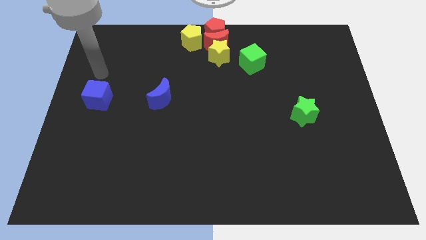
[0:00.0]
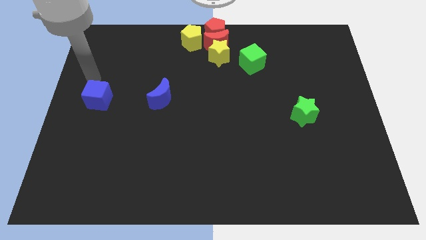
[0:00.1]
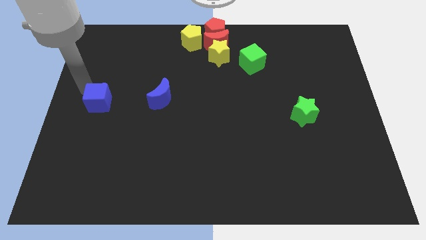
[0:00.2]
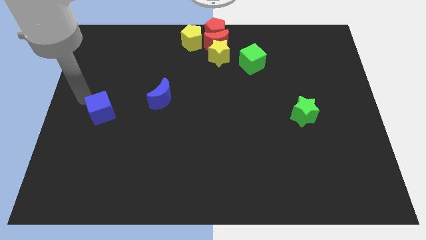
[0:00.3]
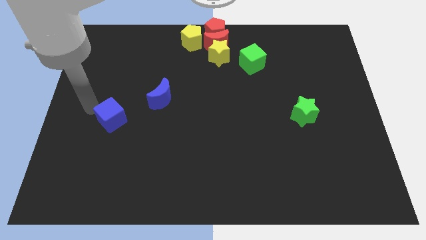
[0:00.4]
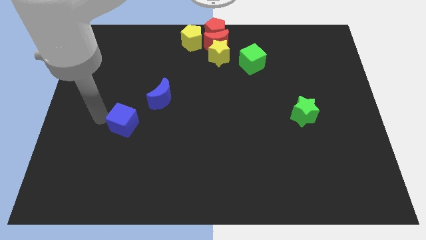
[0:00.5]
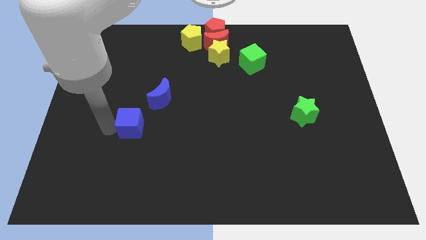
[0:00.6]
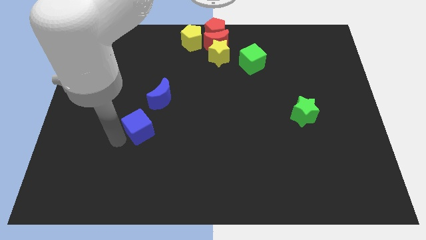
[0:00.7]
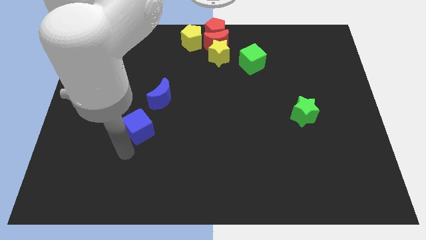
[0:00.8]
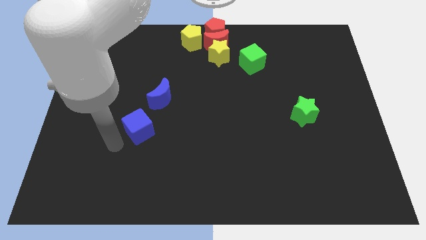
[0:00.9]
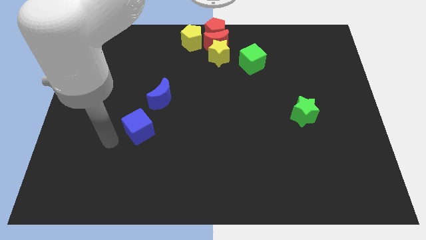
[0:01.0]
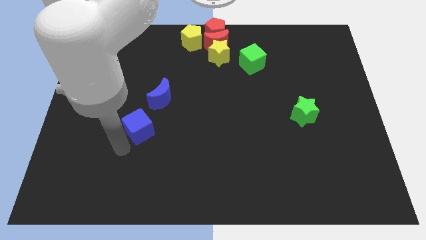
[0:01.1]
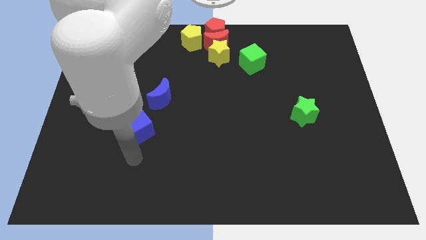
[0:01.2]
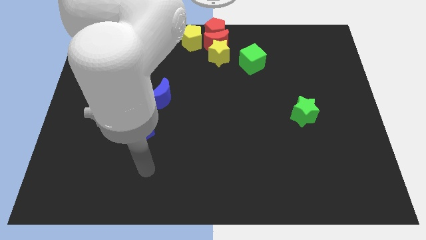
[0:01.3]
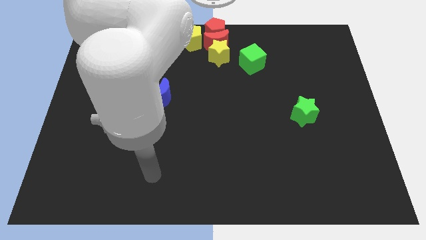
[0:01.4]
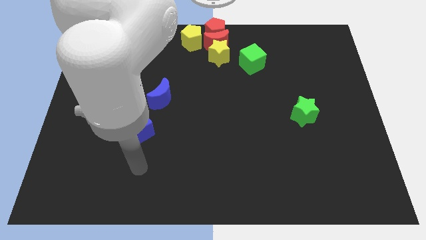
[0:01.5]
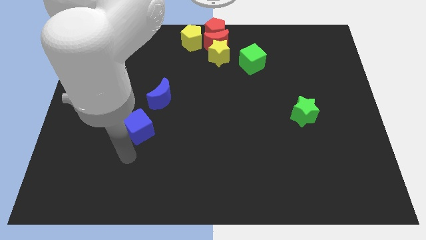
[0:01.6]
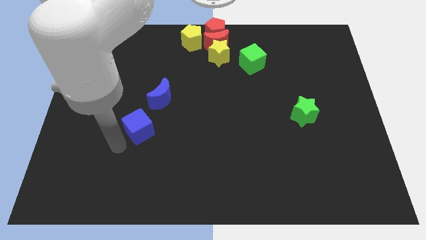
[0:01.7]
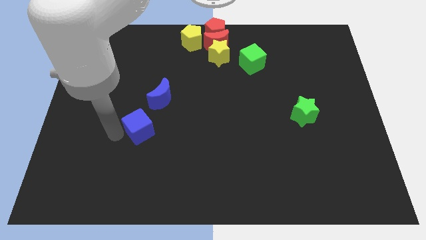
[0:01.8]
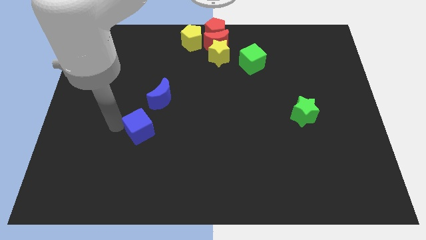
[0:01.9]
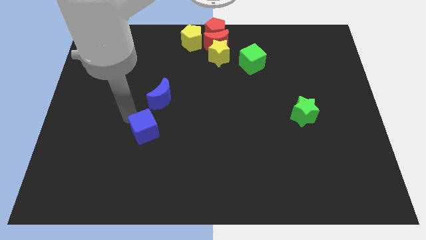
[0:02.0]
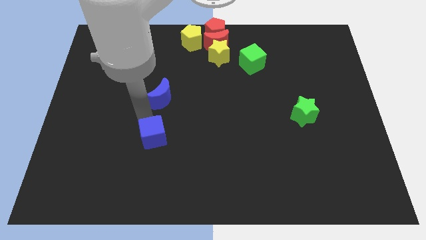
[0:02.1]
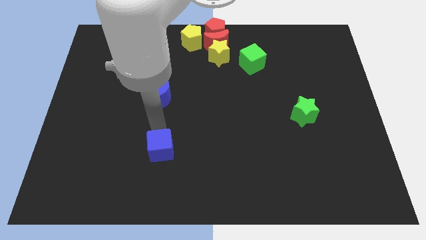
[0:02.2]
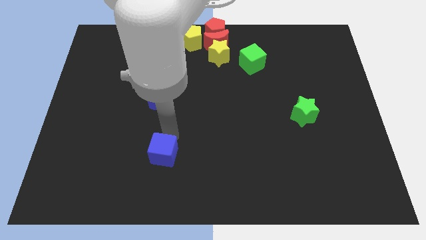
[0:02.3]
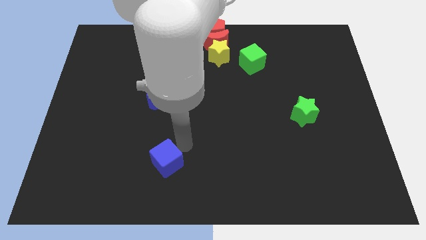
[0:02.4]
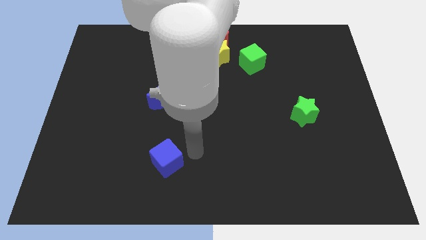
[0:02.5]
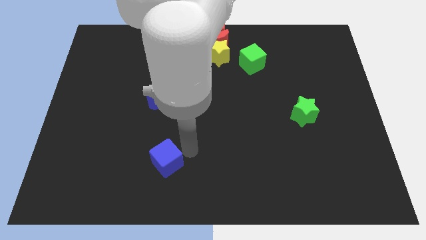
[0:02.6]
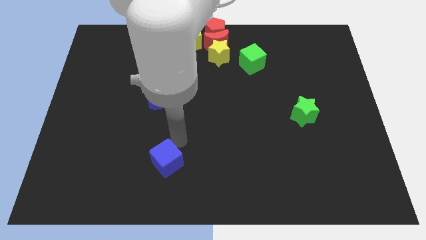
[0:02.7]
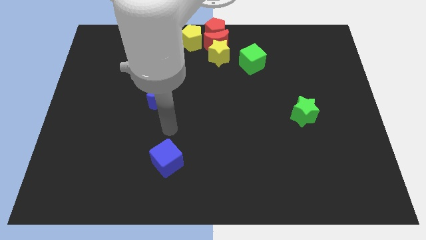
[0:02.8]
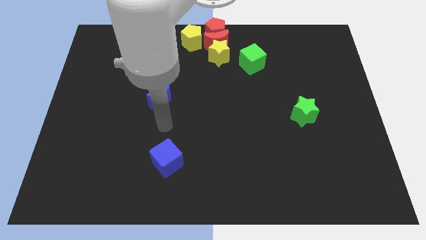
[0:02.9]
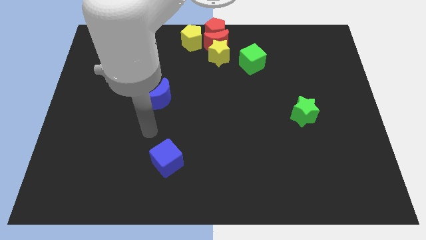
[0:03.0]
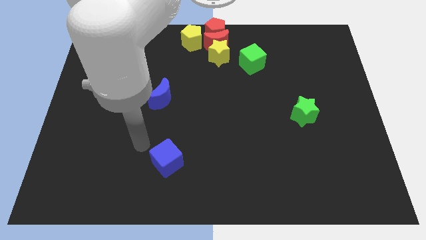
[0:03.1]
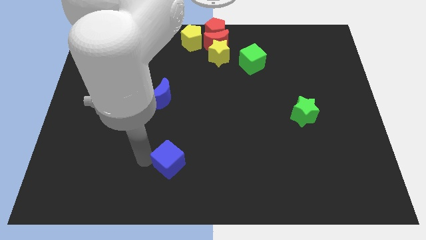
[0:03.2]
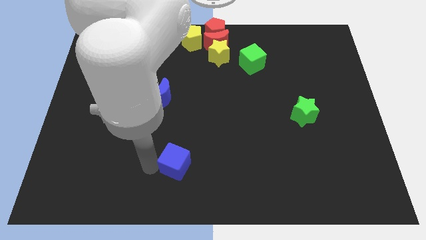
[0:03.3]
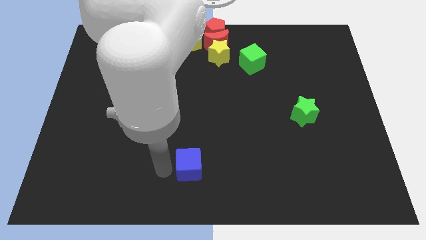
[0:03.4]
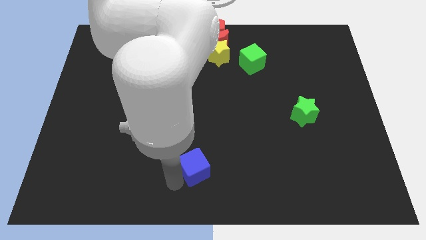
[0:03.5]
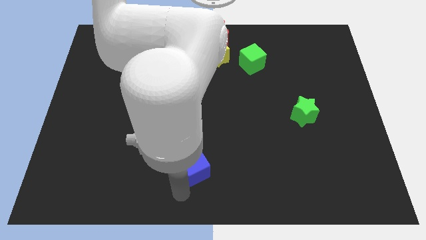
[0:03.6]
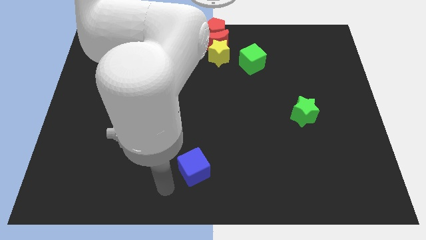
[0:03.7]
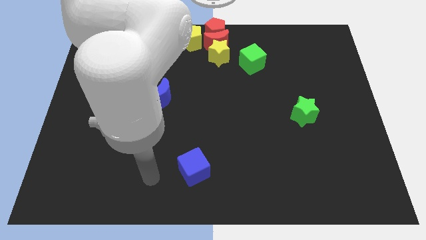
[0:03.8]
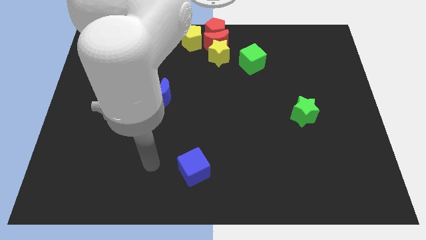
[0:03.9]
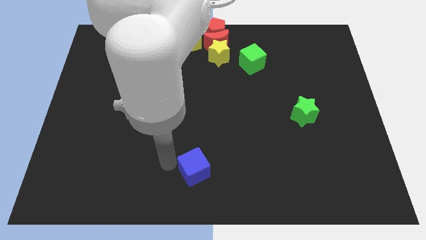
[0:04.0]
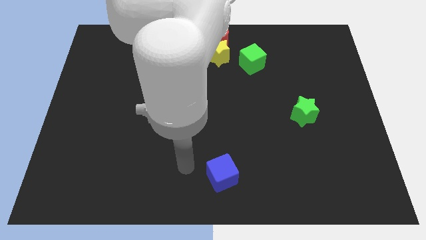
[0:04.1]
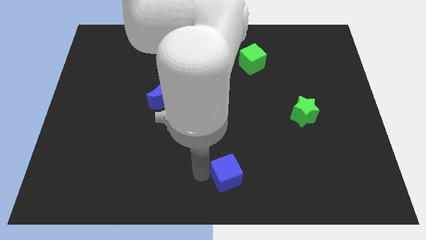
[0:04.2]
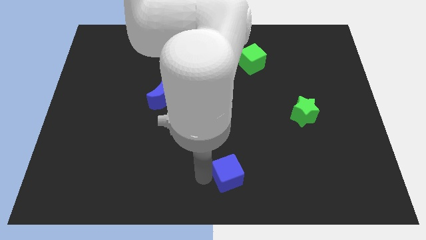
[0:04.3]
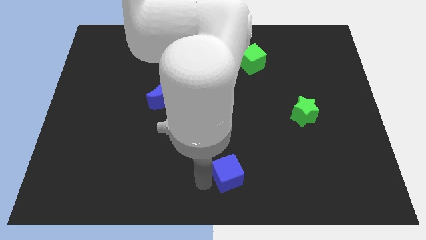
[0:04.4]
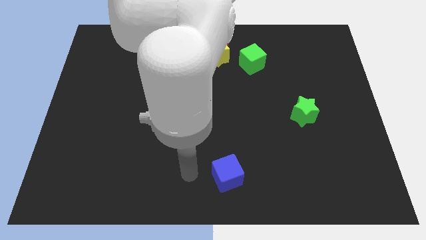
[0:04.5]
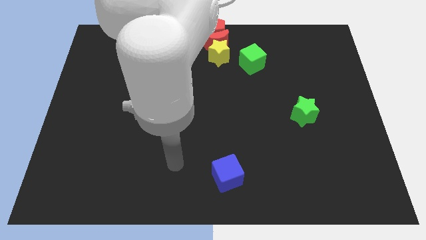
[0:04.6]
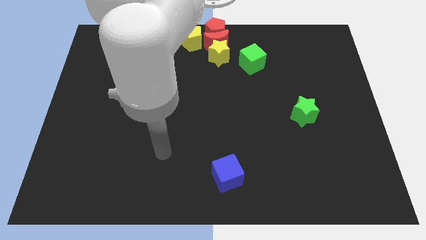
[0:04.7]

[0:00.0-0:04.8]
move the blue cube to the bottom center of the board

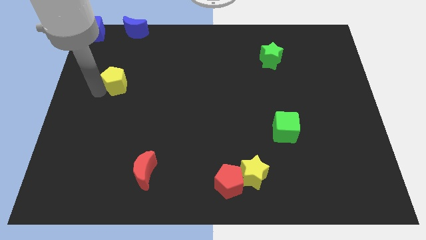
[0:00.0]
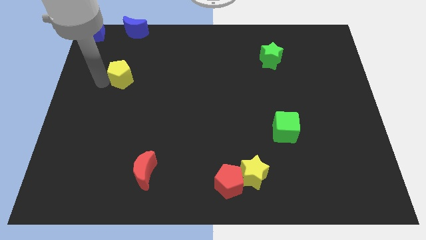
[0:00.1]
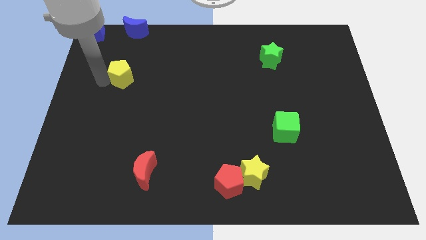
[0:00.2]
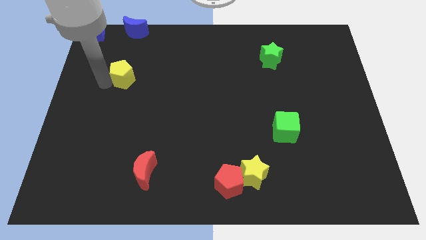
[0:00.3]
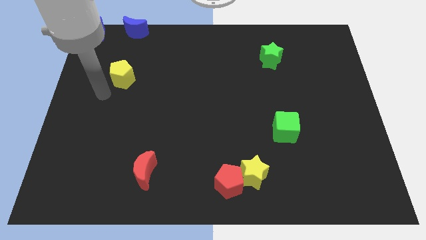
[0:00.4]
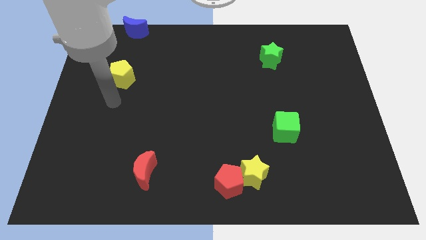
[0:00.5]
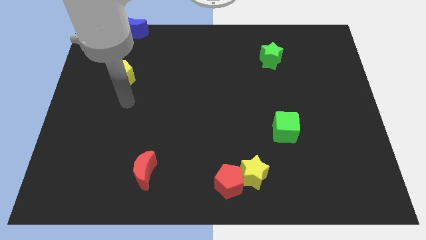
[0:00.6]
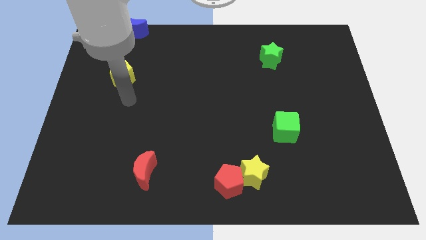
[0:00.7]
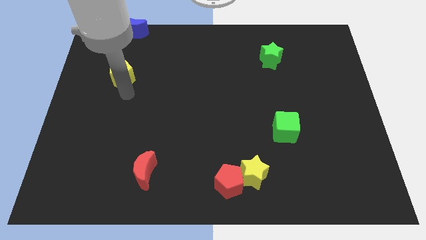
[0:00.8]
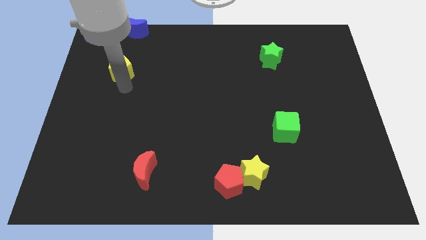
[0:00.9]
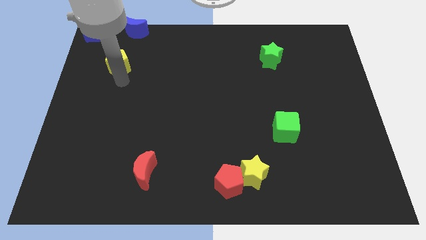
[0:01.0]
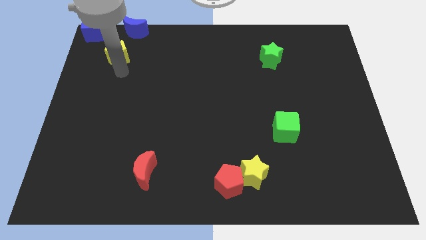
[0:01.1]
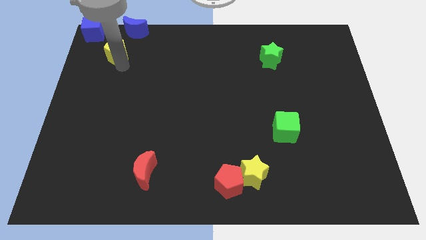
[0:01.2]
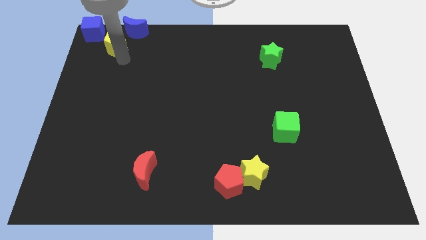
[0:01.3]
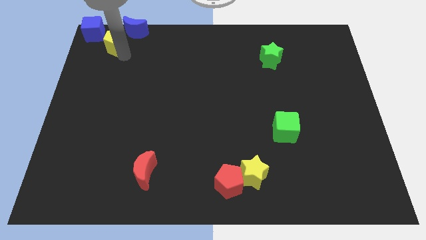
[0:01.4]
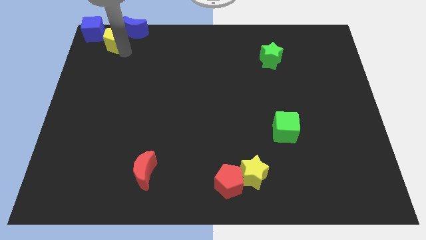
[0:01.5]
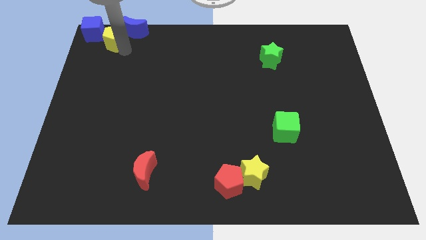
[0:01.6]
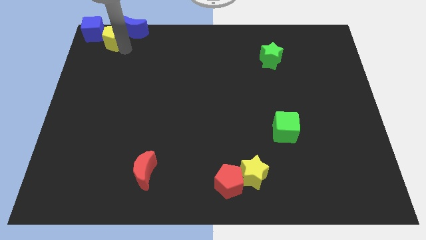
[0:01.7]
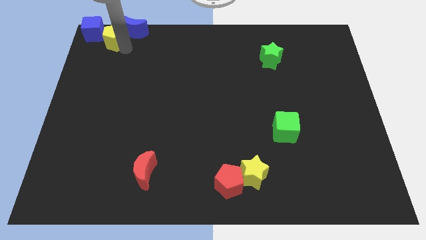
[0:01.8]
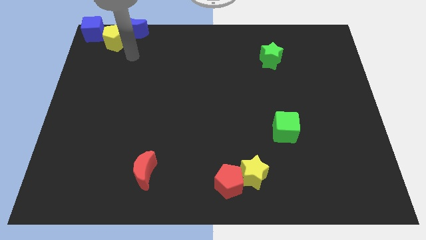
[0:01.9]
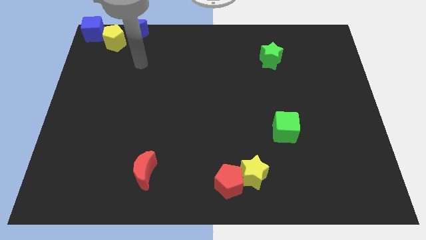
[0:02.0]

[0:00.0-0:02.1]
push the yellow pentagon close to the blue cube

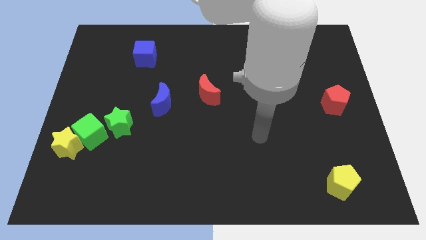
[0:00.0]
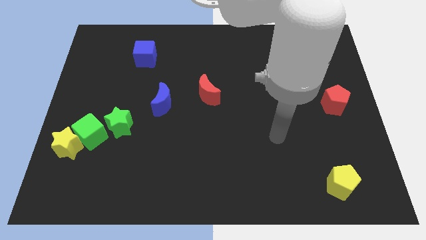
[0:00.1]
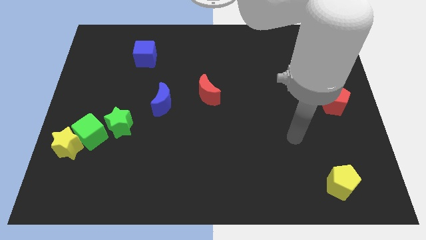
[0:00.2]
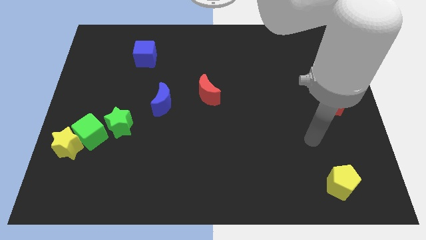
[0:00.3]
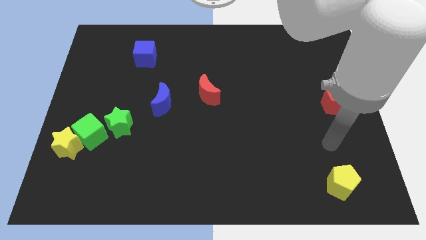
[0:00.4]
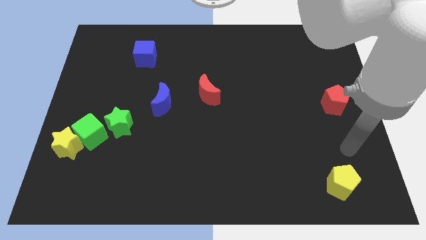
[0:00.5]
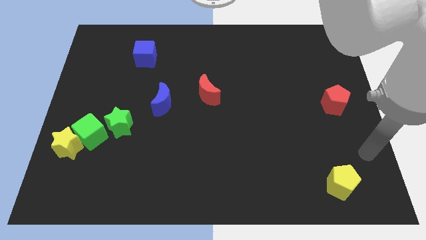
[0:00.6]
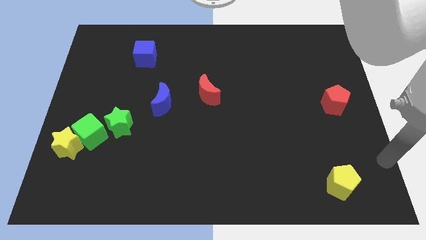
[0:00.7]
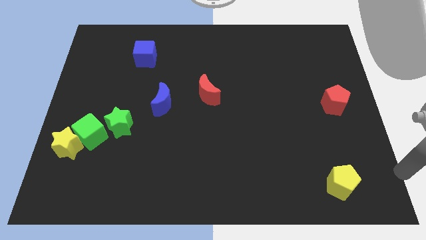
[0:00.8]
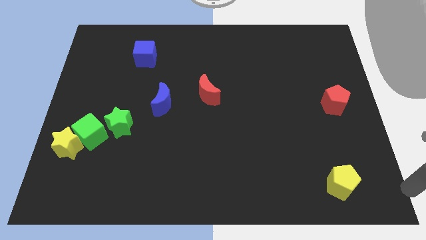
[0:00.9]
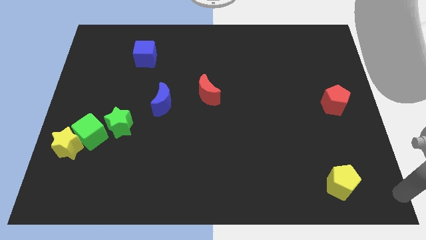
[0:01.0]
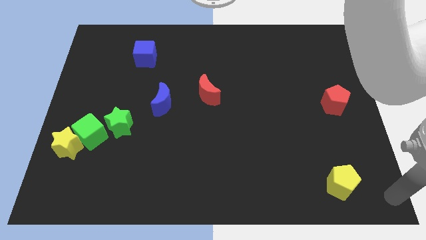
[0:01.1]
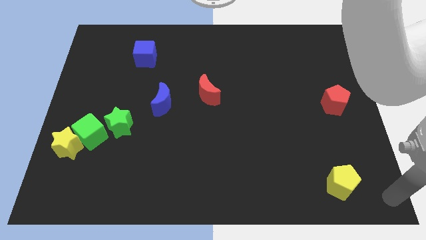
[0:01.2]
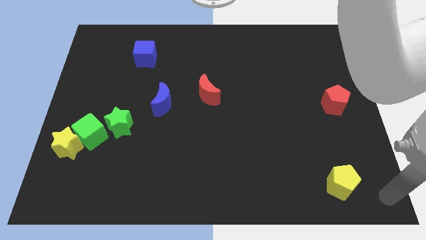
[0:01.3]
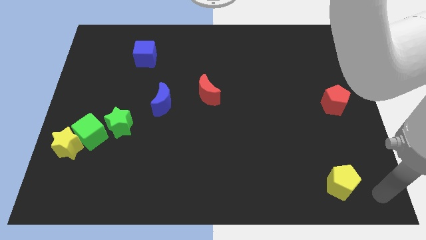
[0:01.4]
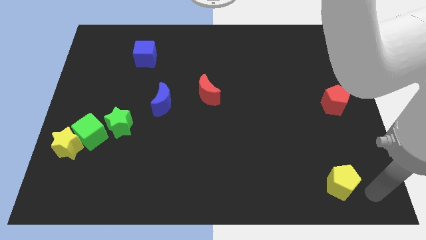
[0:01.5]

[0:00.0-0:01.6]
move arm towards the yellow pentagon

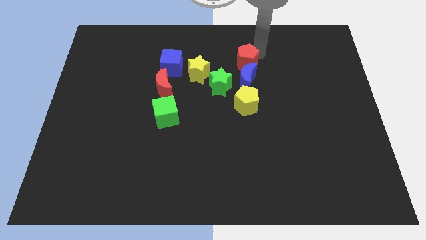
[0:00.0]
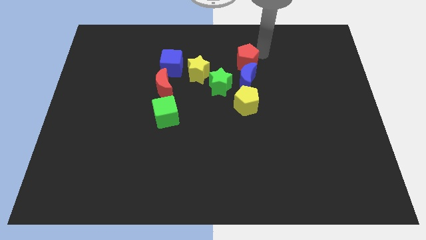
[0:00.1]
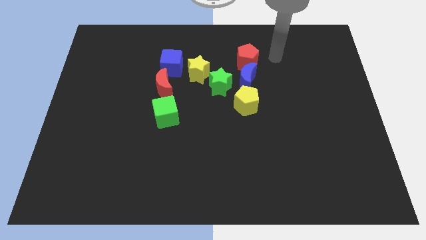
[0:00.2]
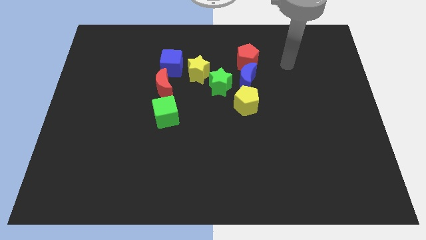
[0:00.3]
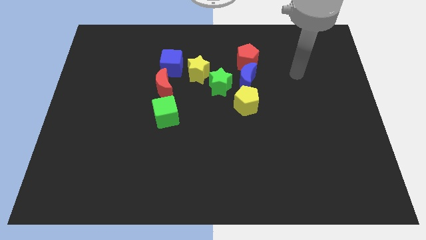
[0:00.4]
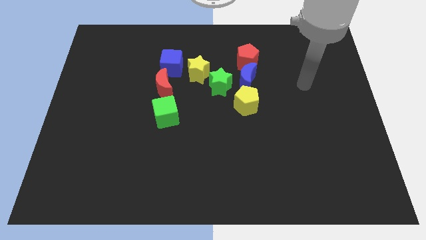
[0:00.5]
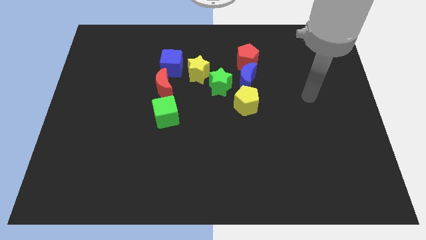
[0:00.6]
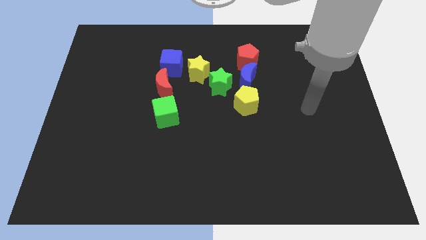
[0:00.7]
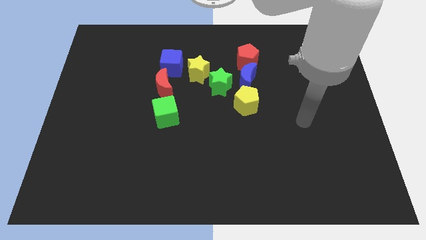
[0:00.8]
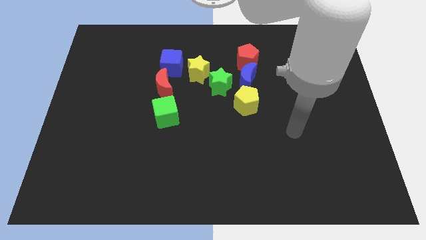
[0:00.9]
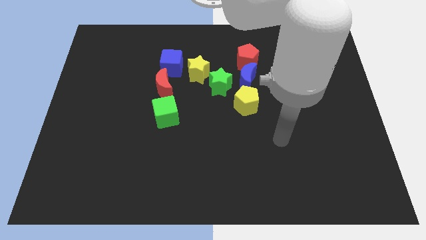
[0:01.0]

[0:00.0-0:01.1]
move the arm away from the red pentagon
